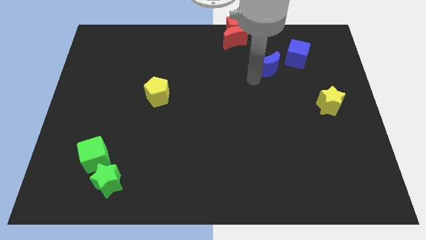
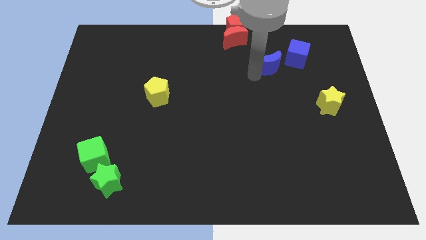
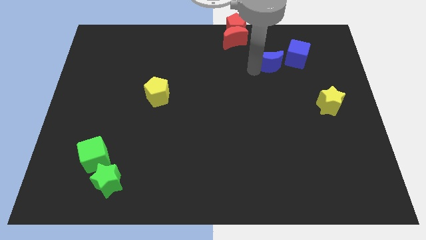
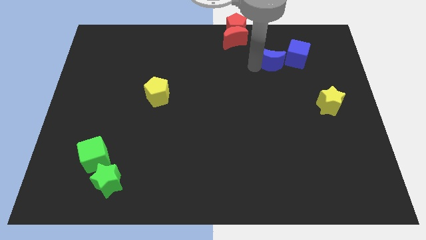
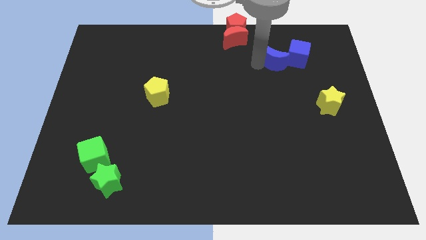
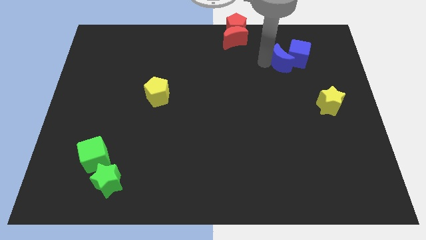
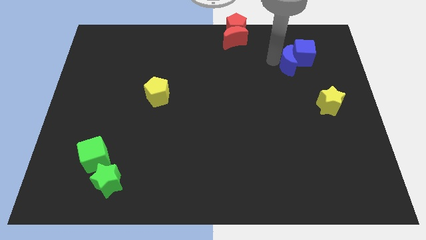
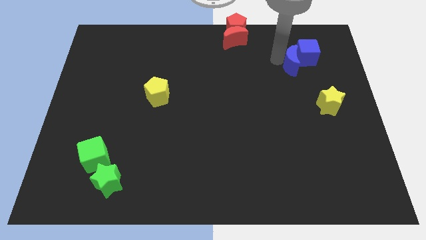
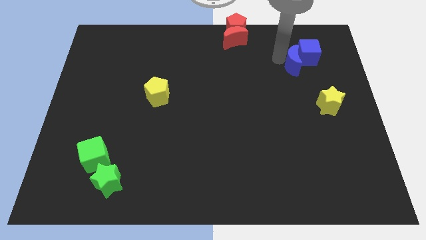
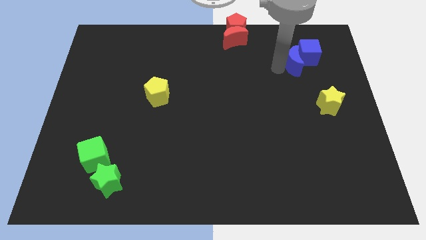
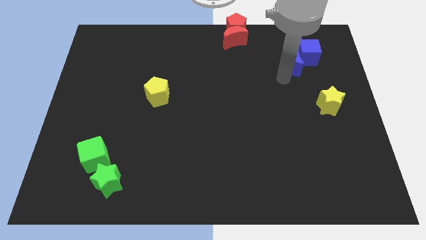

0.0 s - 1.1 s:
push the blue moon towards the blue cube

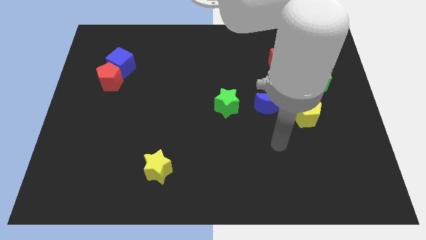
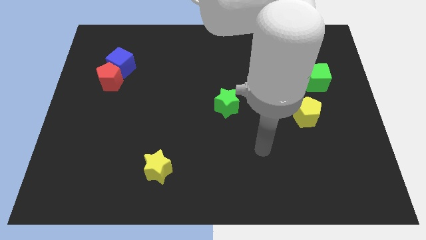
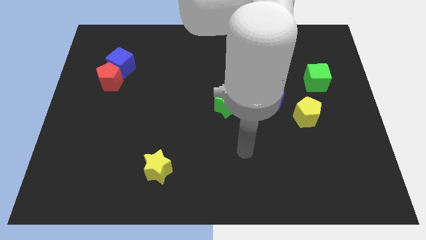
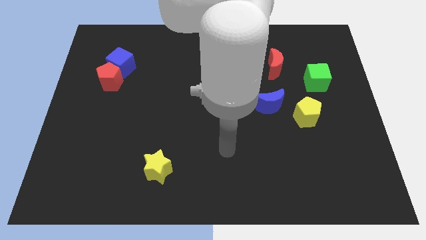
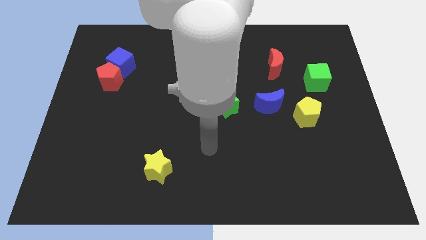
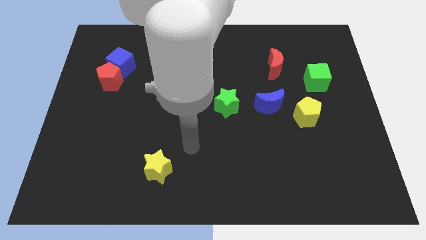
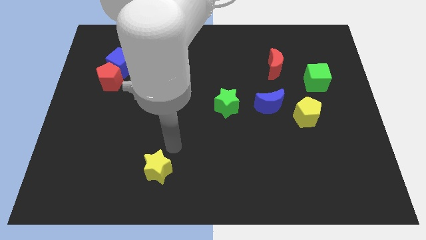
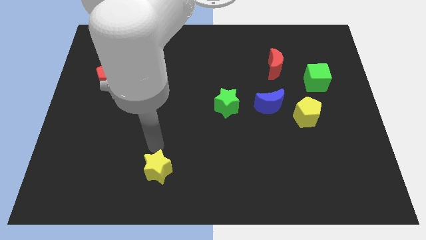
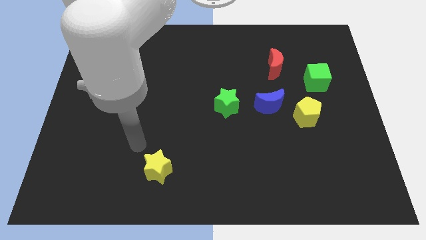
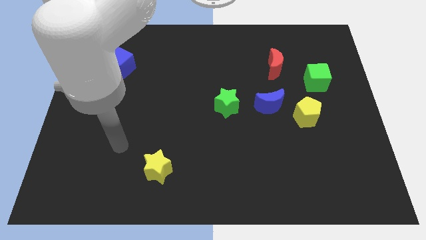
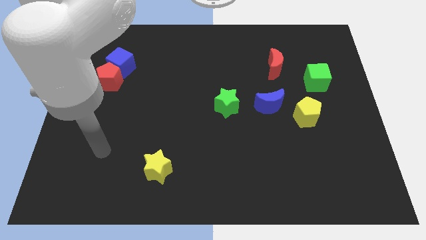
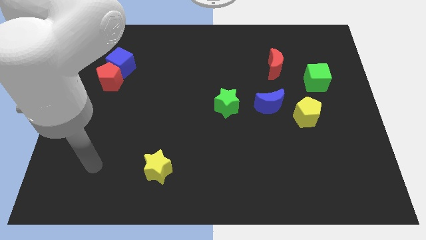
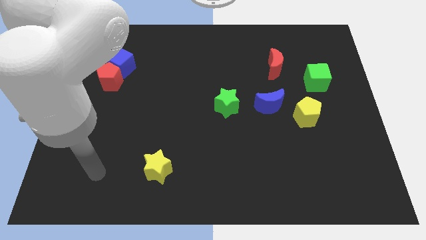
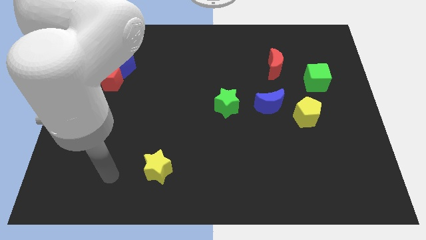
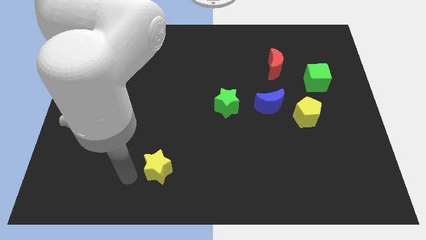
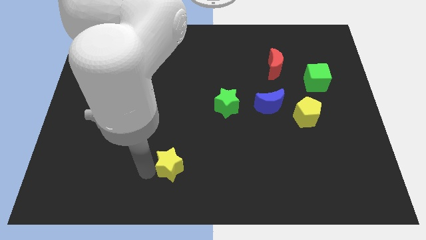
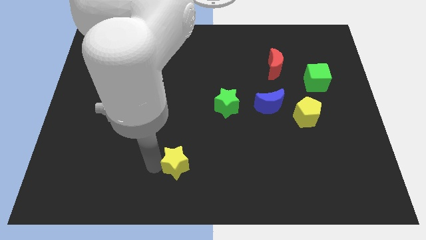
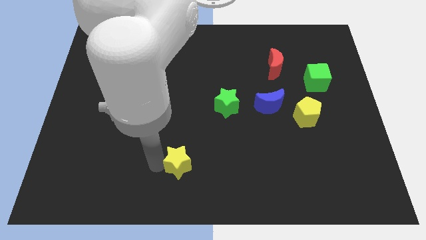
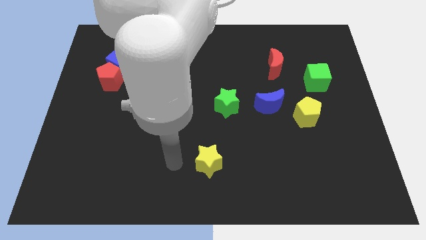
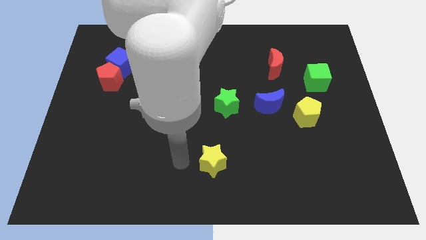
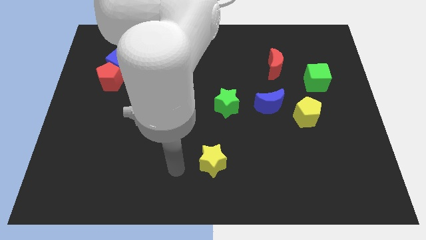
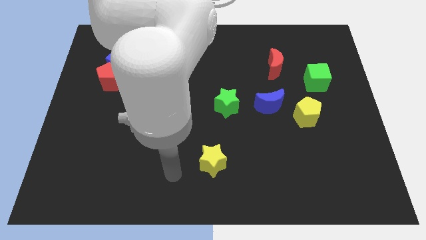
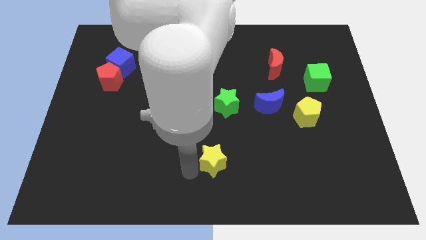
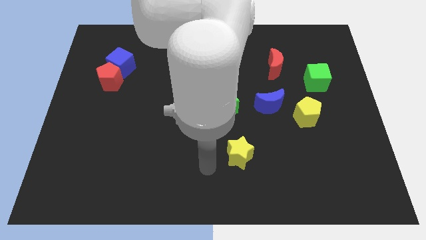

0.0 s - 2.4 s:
push yellow star below green star

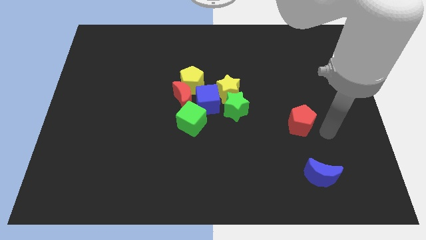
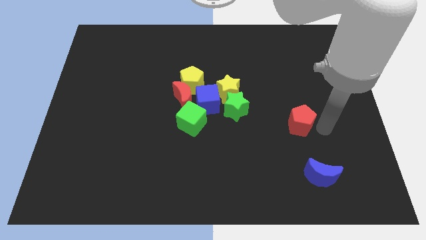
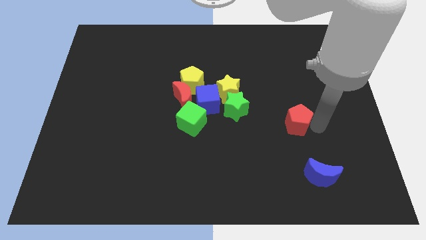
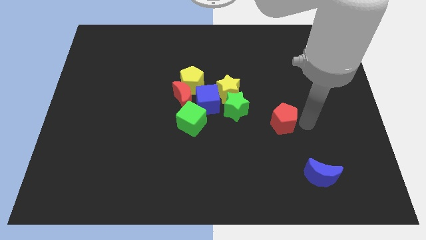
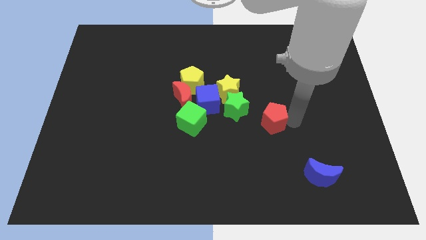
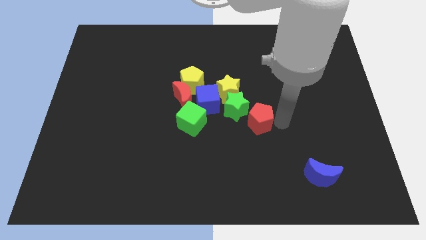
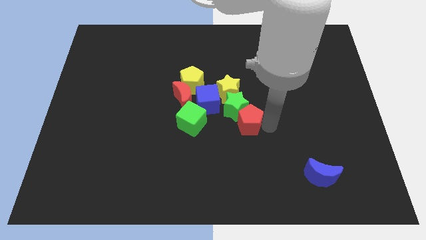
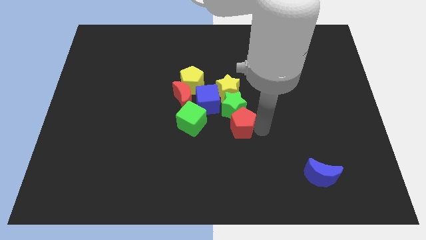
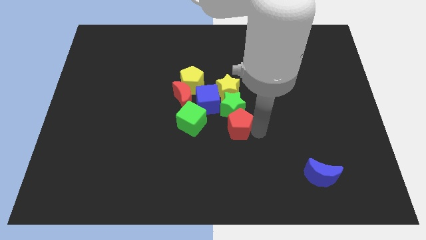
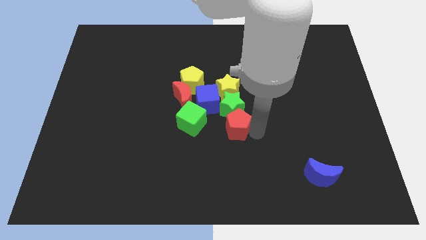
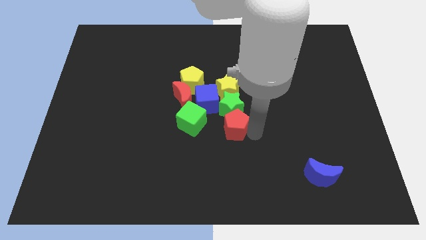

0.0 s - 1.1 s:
move the red pentagon into the green star

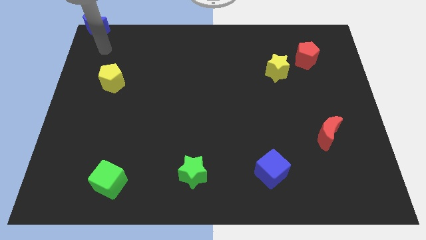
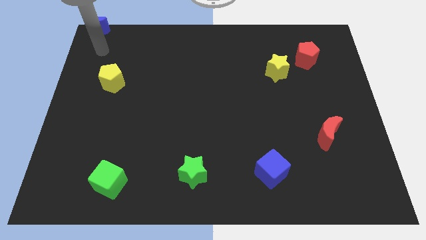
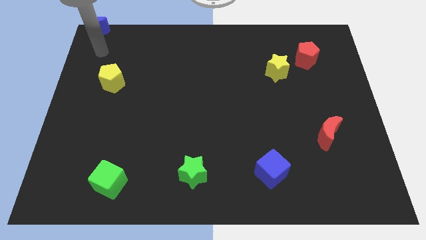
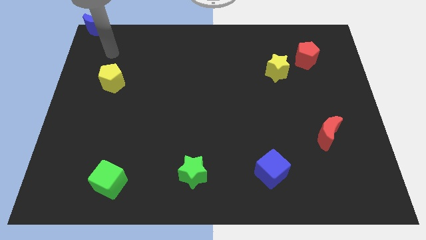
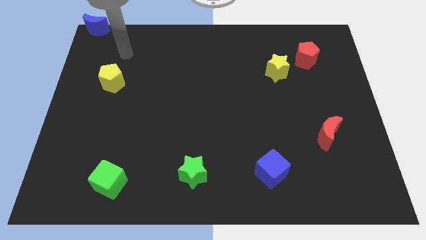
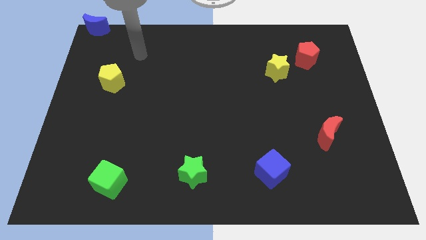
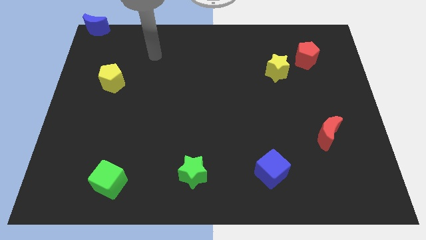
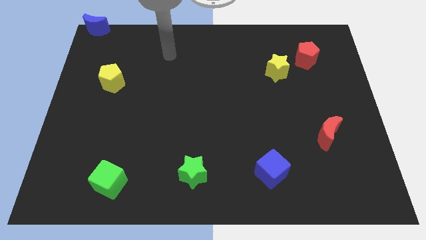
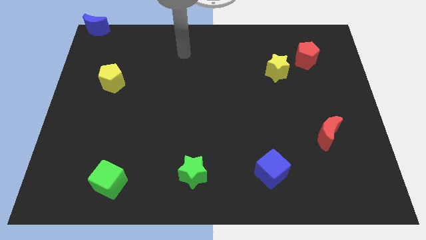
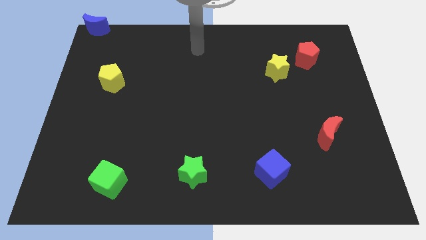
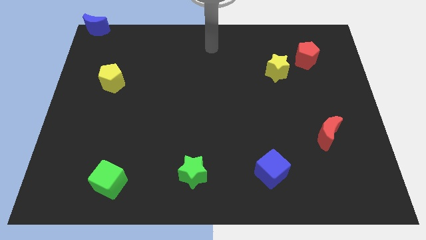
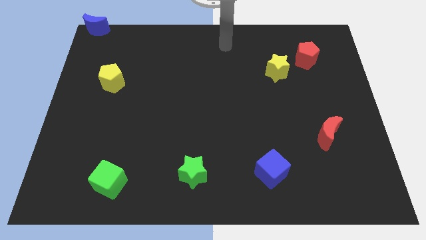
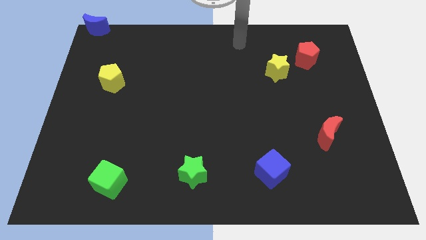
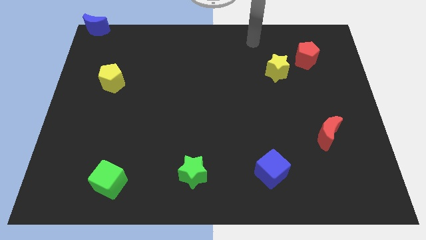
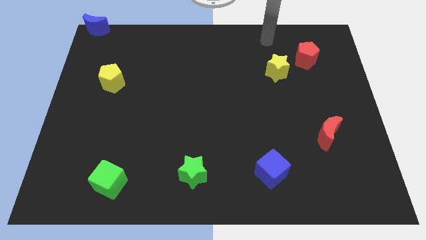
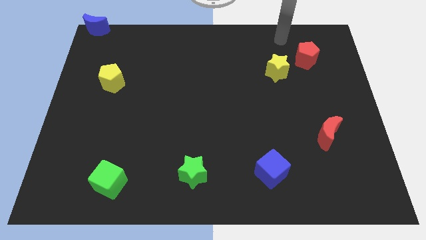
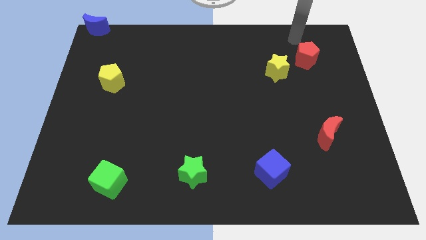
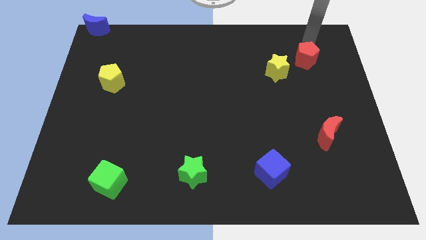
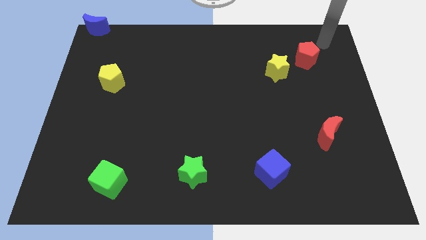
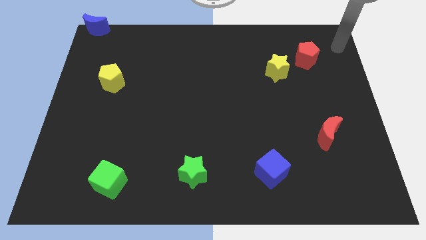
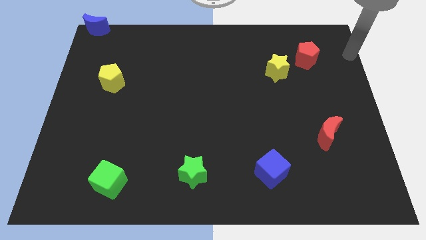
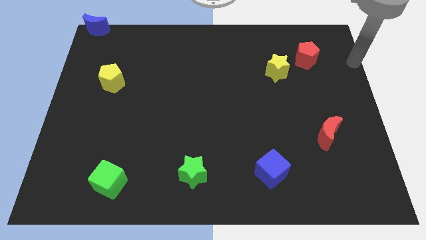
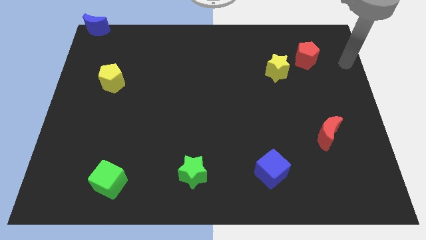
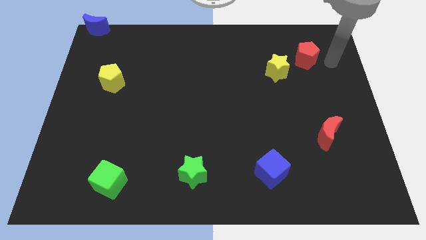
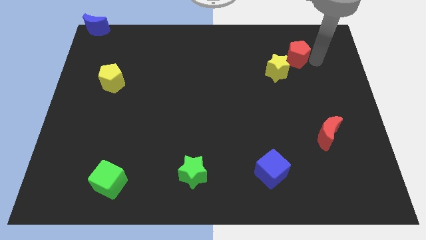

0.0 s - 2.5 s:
move your arm to the right of red pentagon

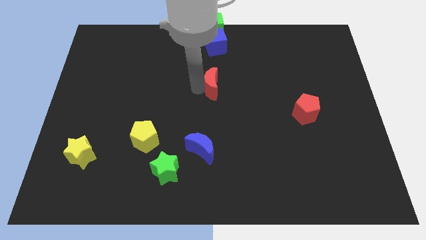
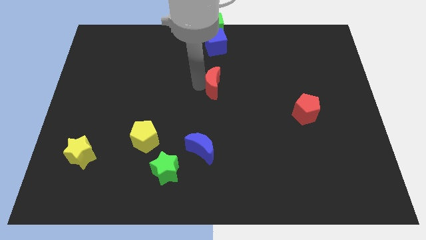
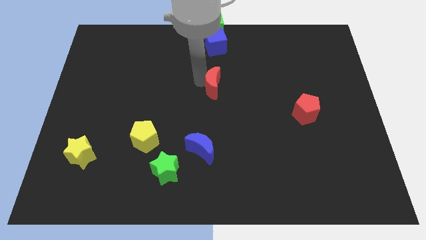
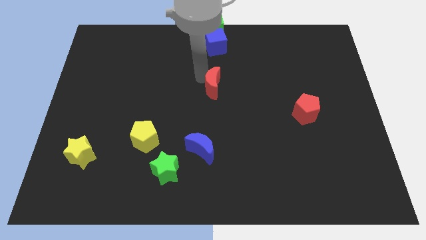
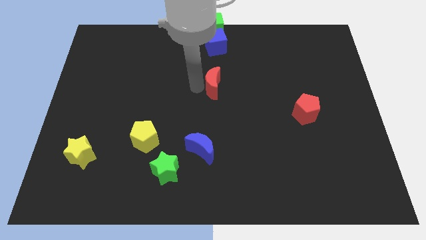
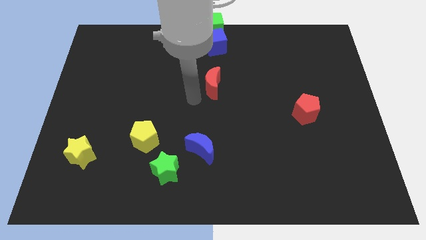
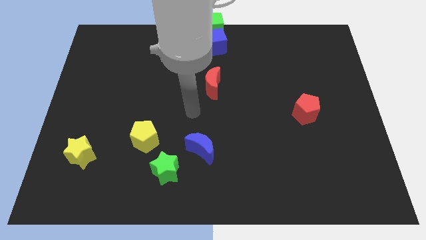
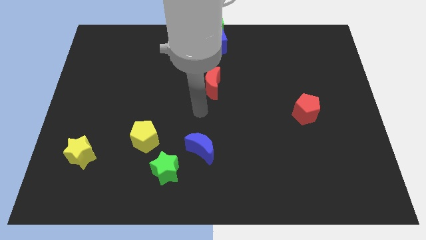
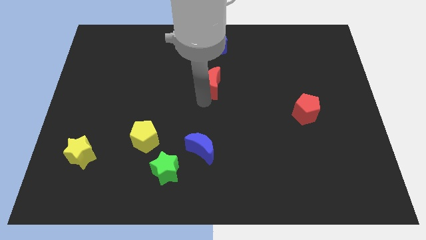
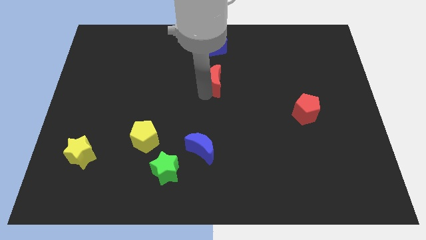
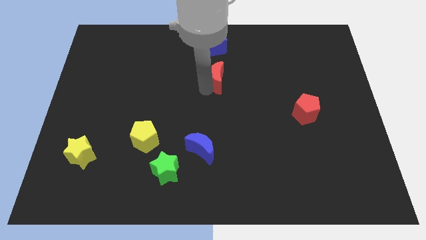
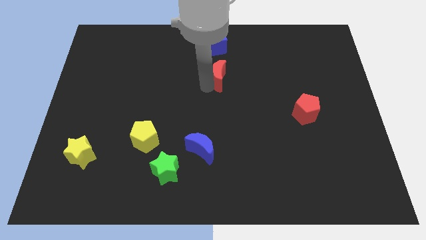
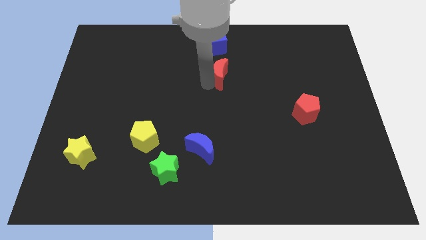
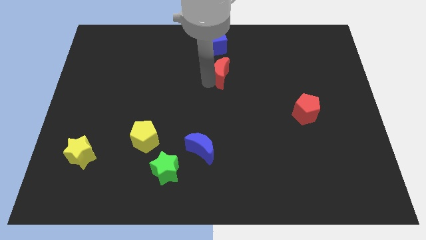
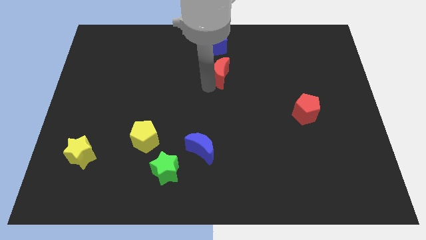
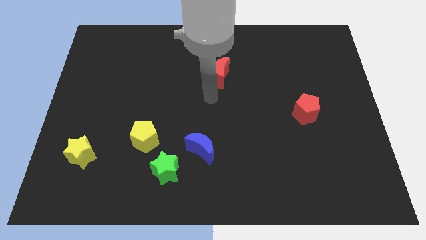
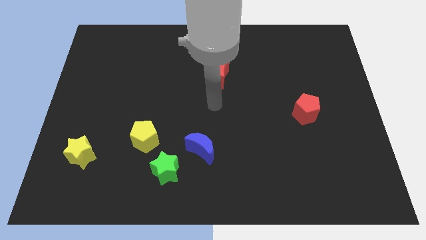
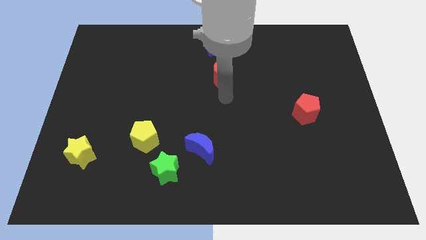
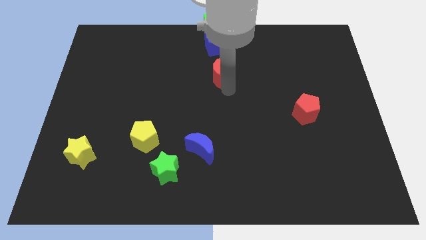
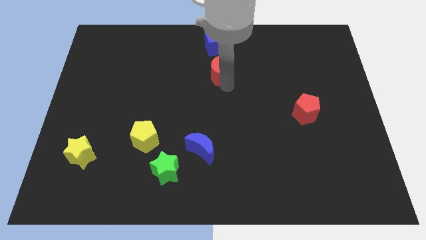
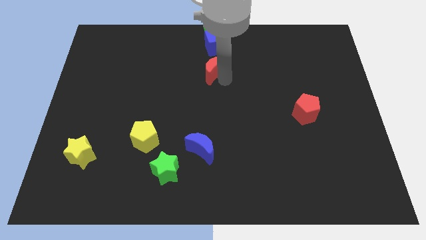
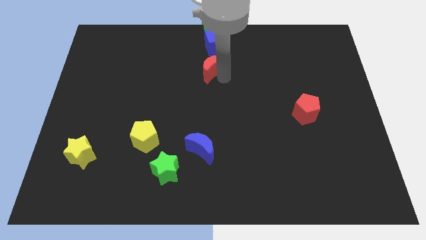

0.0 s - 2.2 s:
place the red crescent at the bottom of the blue cube
